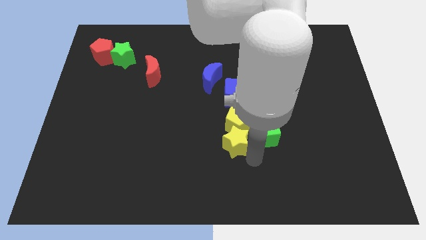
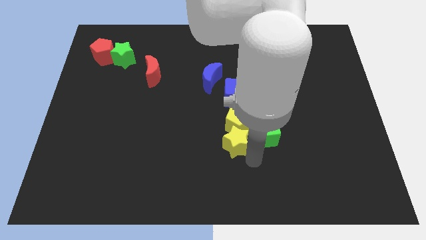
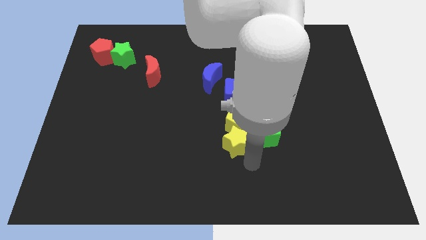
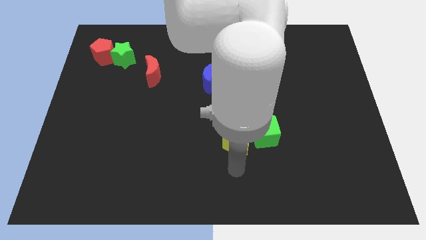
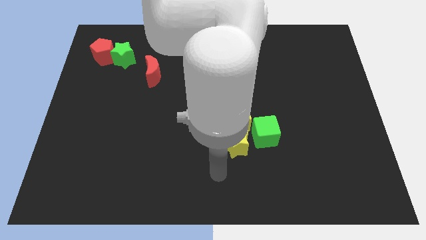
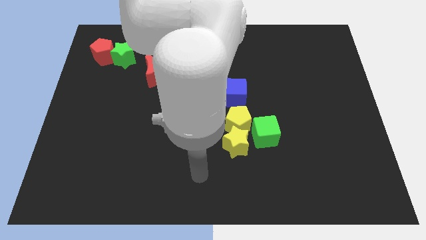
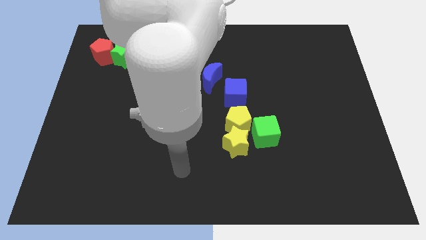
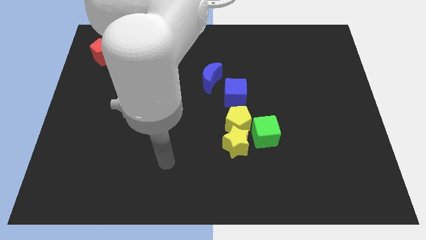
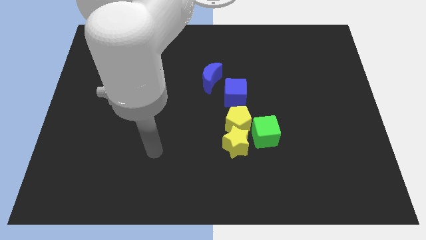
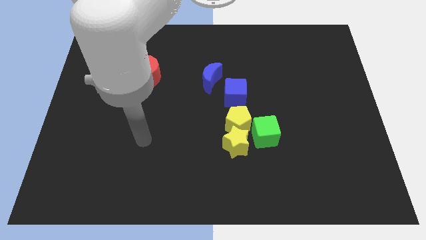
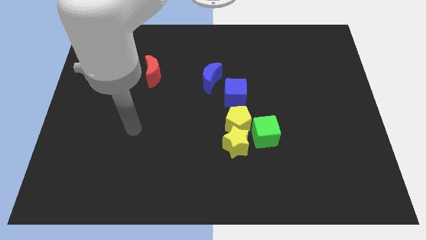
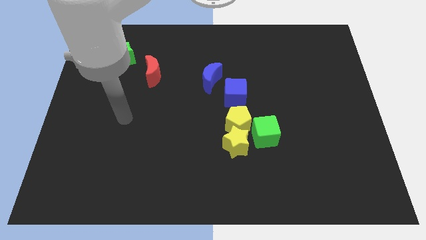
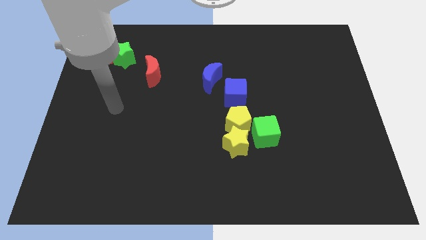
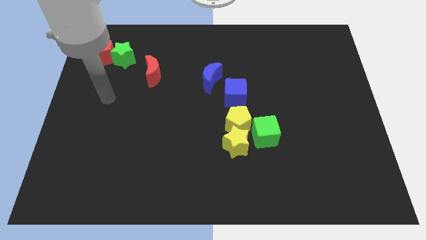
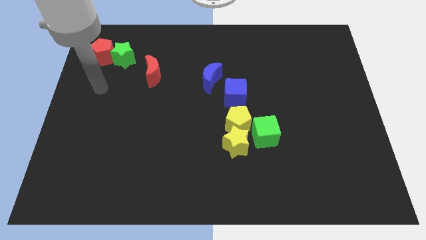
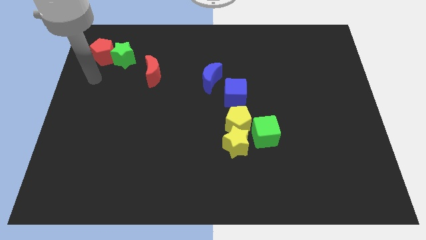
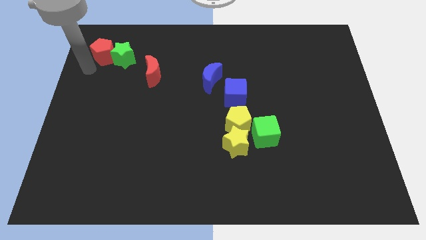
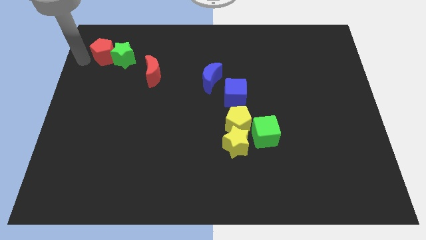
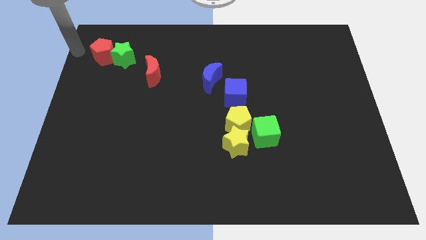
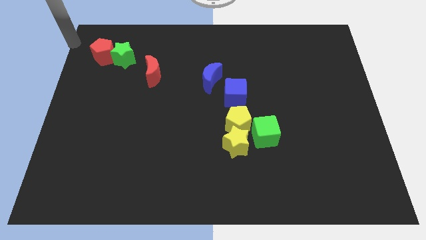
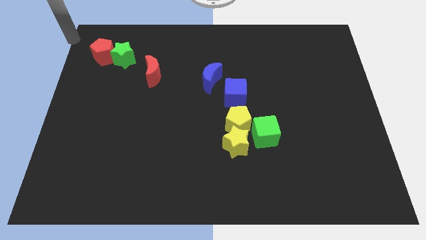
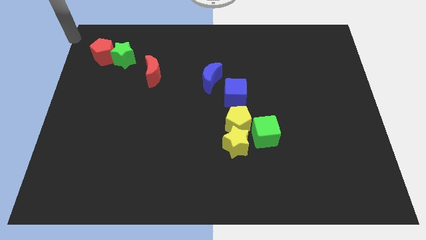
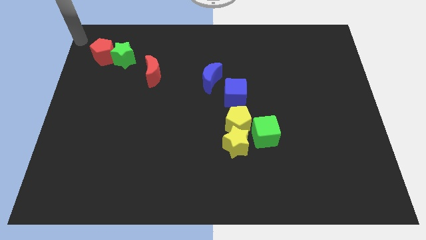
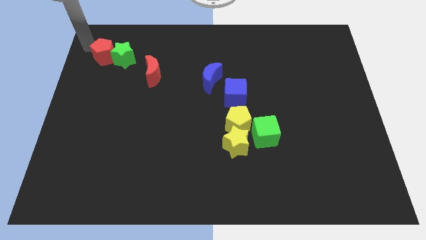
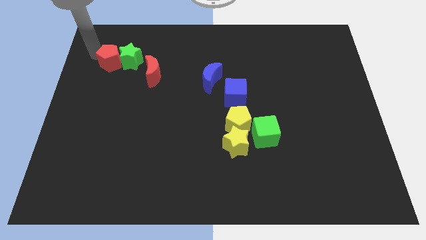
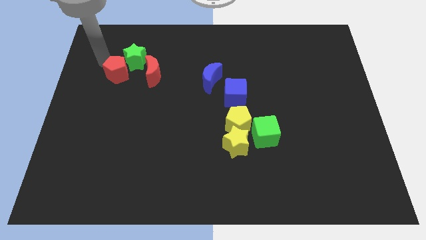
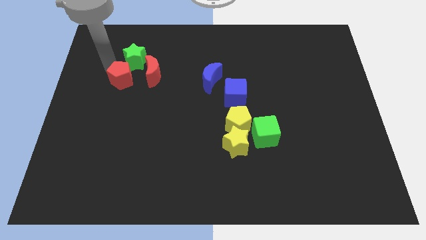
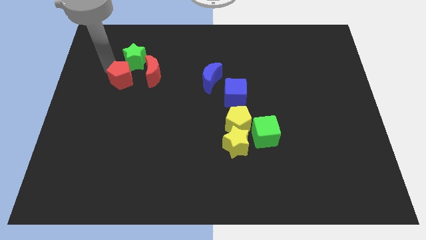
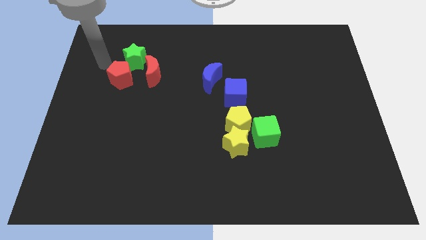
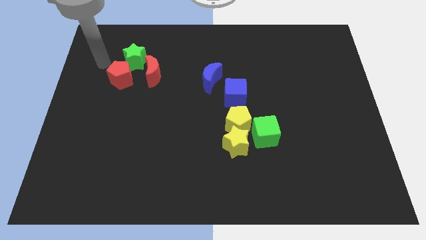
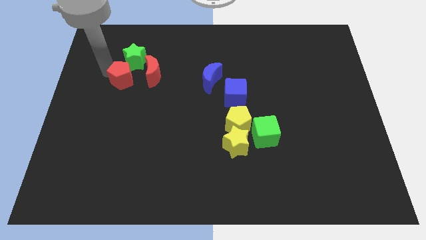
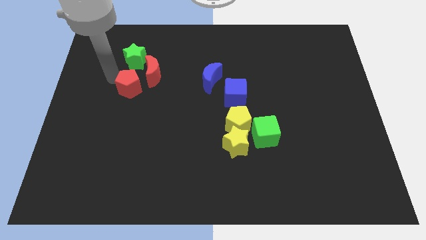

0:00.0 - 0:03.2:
move the green star and red pentagon slightly to the left side of the red moon

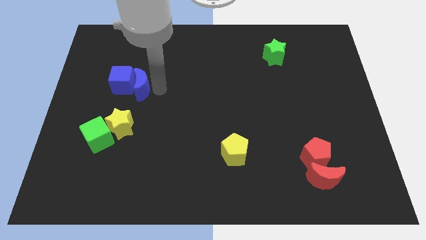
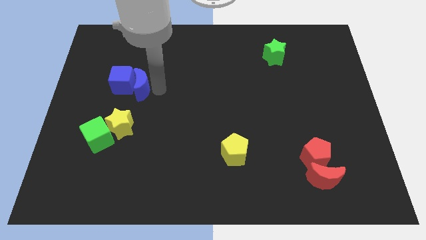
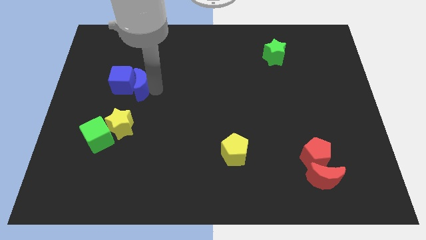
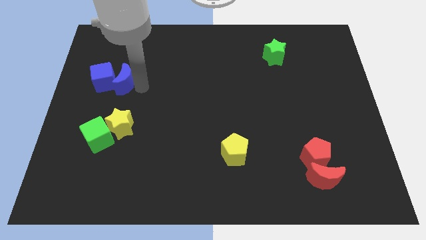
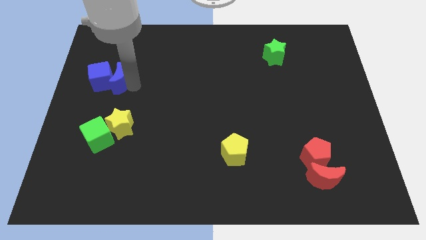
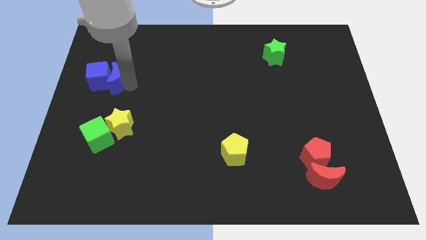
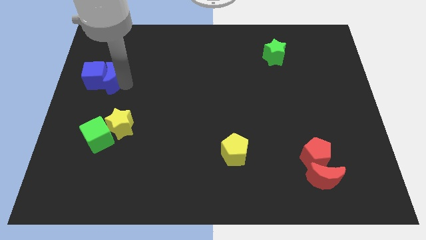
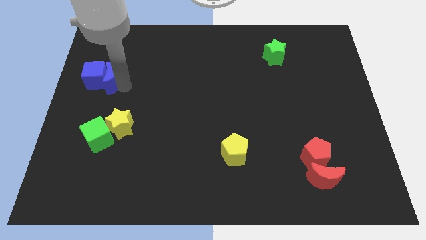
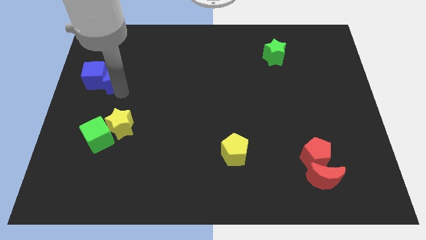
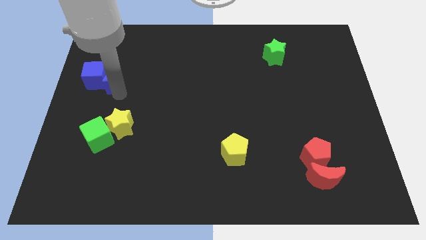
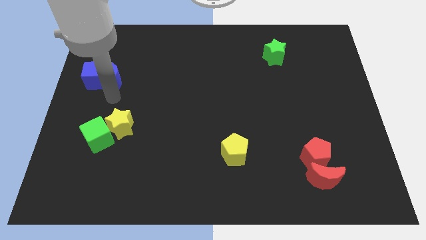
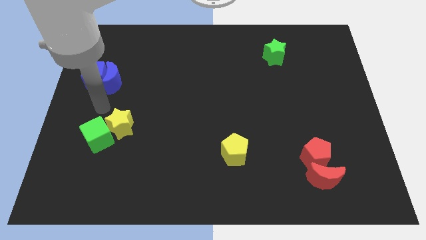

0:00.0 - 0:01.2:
move the blue blocks to the top of the green cube

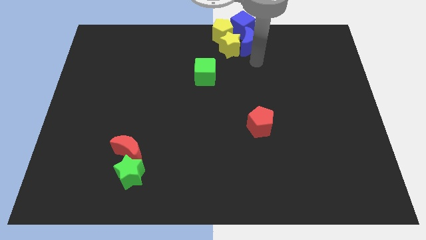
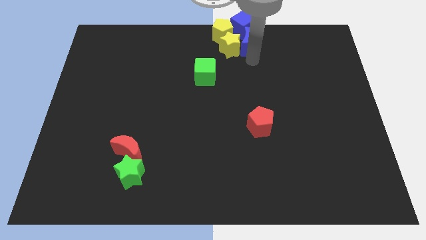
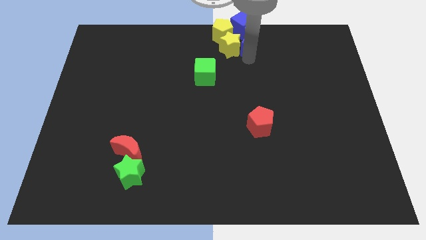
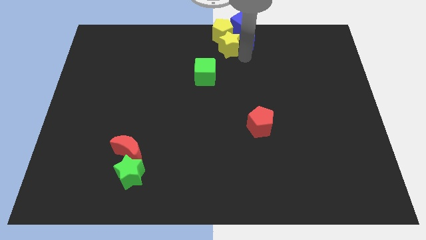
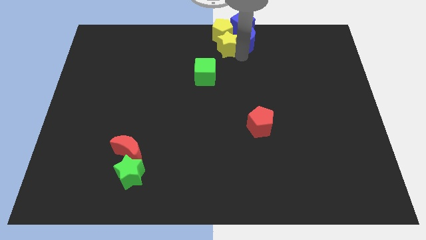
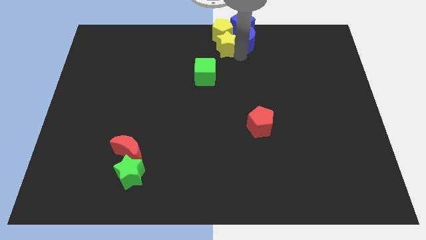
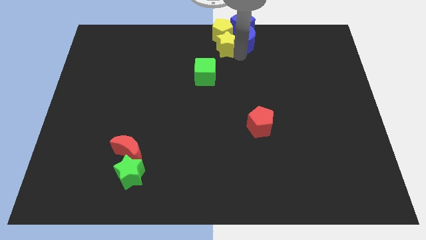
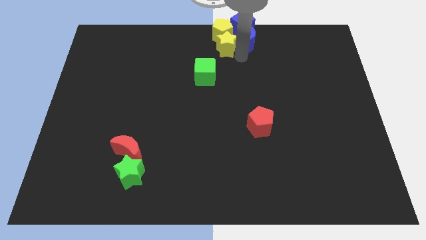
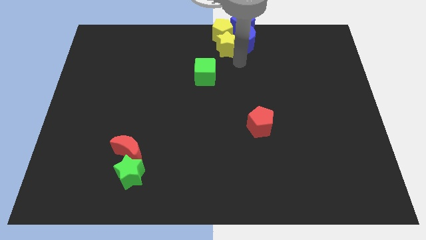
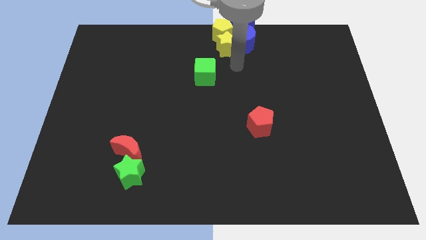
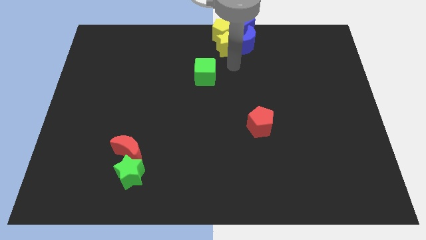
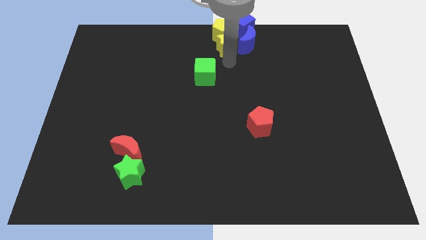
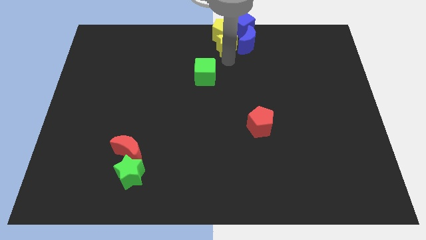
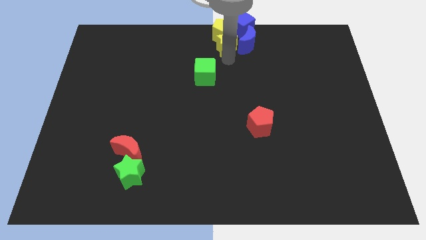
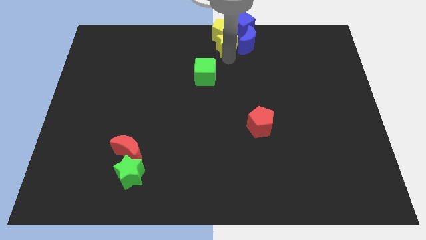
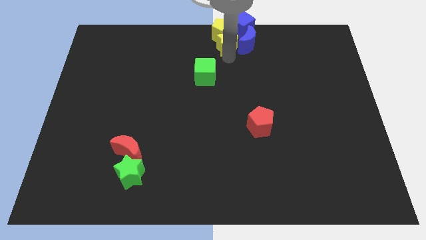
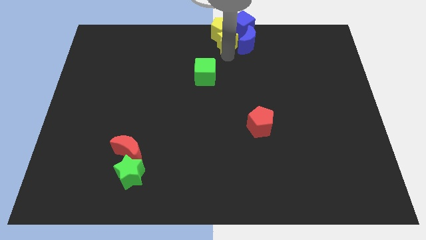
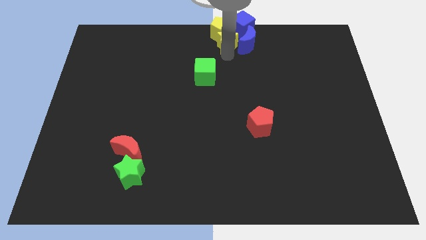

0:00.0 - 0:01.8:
move the arm towards the yellow star

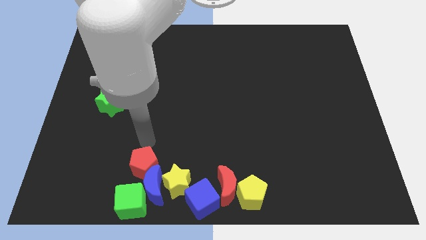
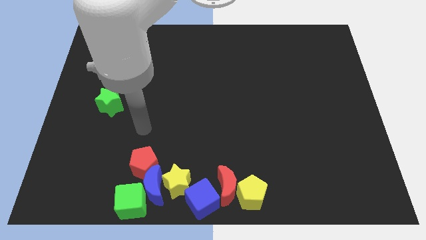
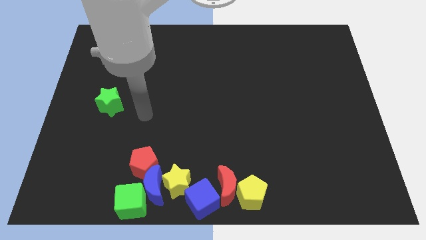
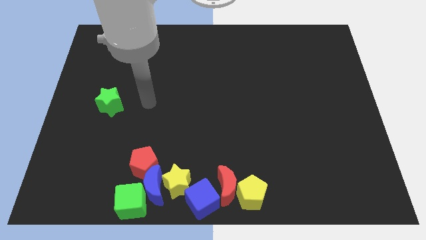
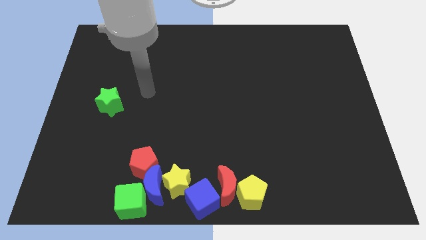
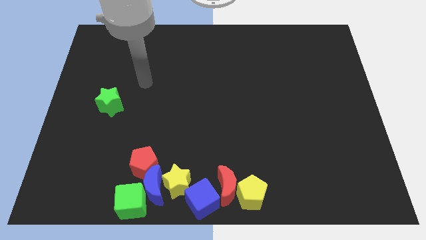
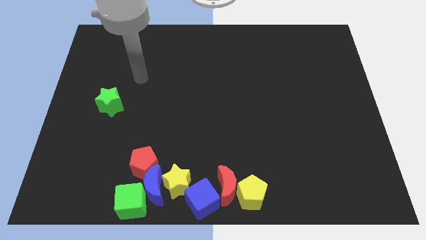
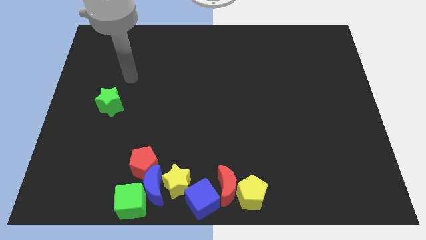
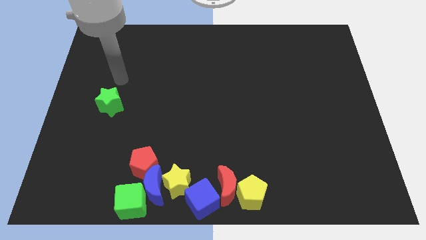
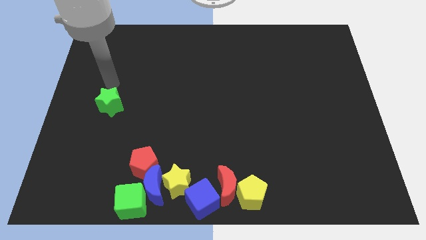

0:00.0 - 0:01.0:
move your arm away from red pentagon

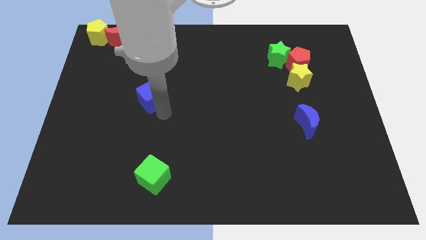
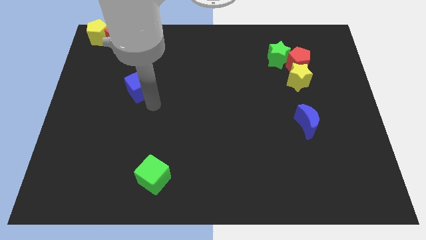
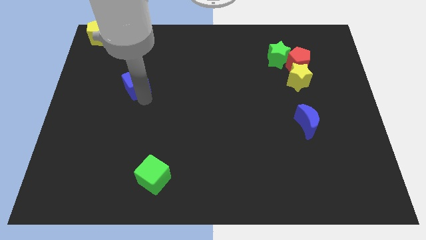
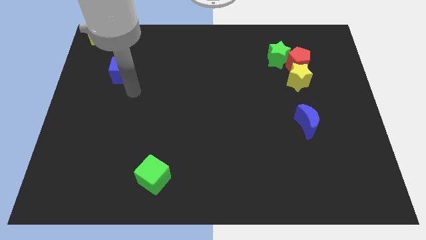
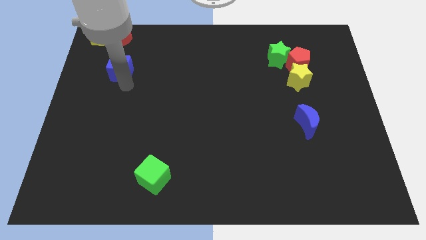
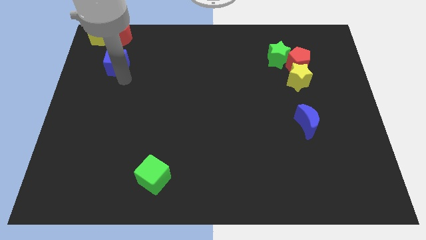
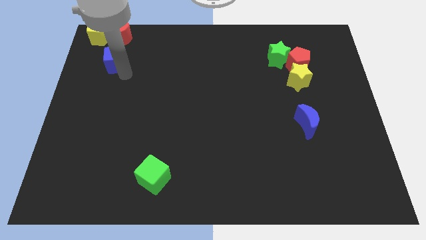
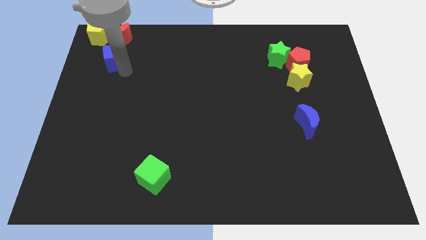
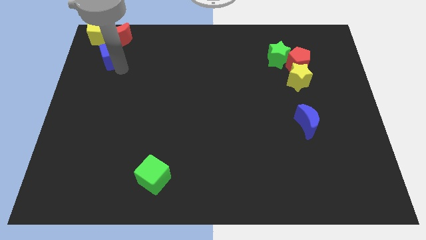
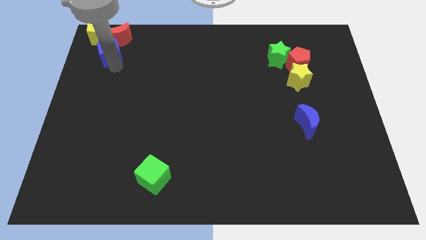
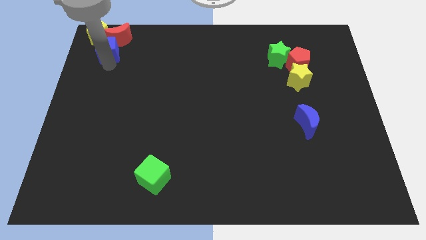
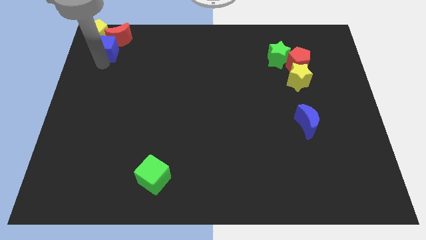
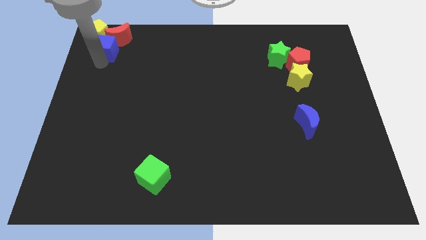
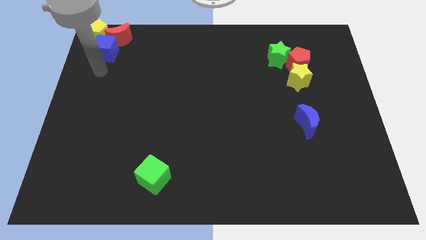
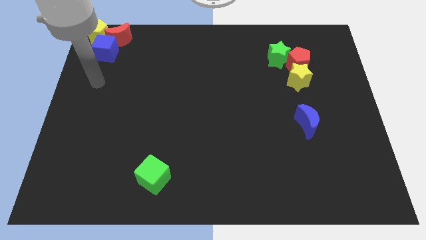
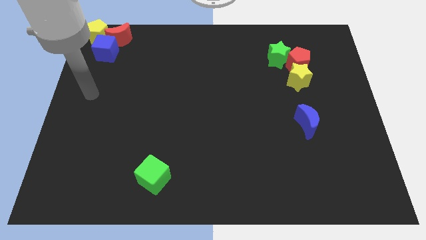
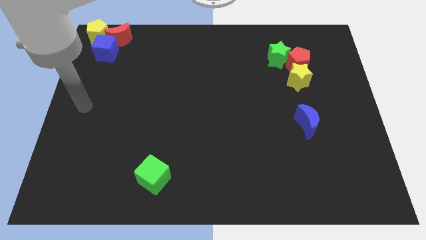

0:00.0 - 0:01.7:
push the blue cube into the yellow pentagon and red crescent
